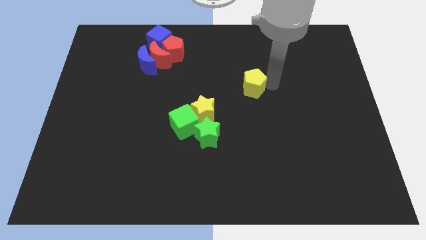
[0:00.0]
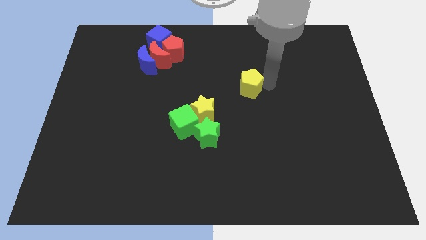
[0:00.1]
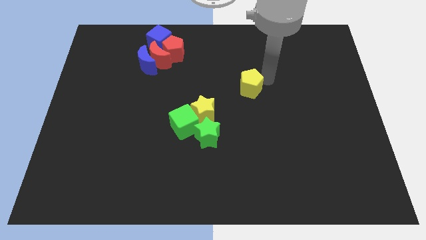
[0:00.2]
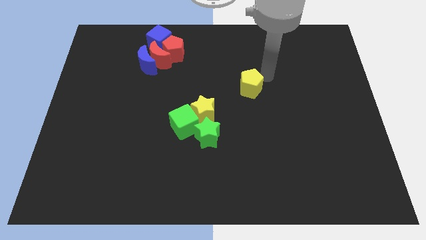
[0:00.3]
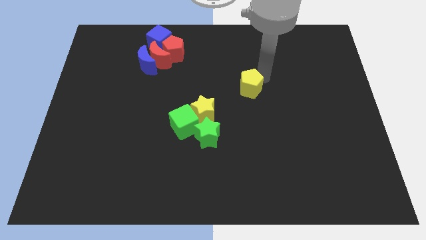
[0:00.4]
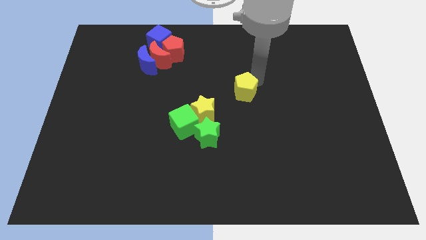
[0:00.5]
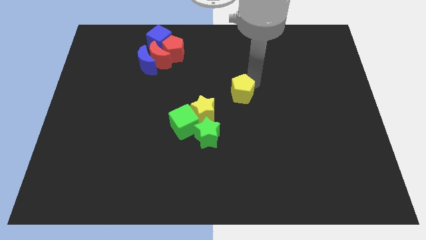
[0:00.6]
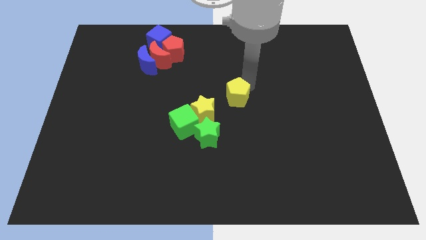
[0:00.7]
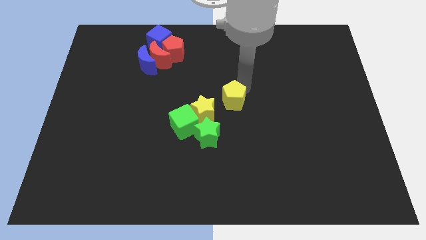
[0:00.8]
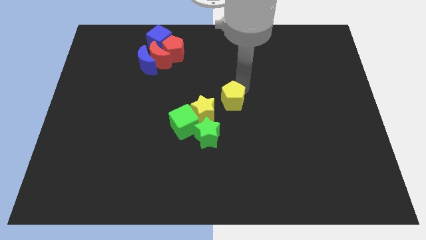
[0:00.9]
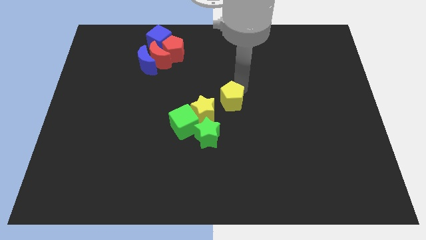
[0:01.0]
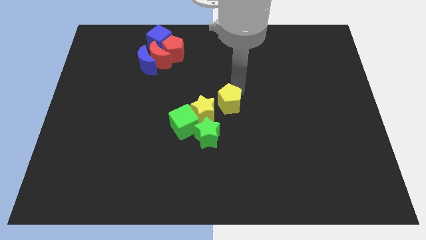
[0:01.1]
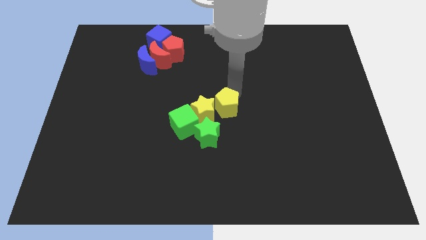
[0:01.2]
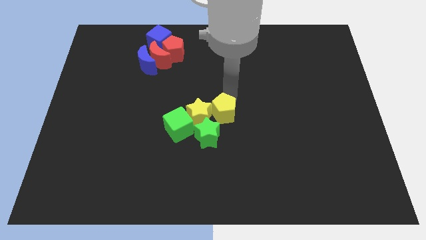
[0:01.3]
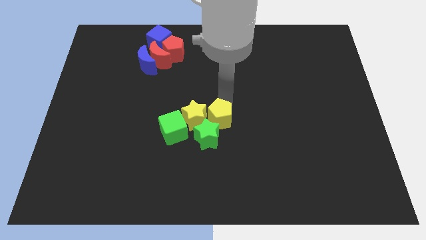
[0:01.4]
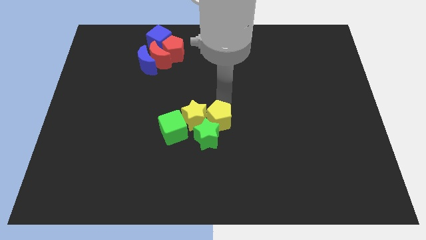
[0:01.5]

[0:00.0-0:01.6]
move the yellow pentagon to the right of the yellow star

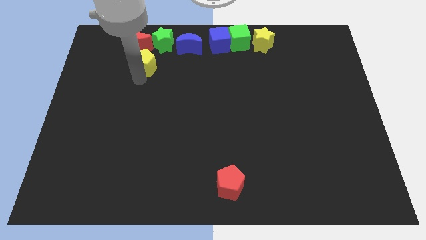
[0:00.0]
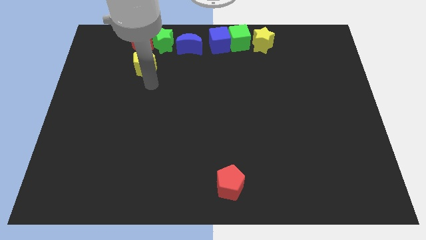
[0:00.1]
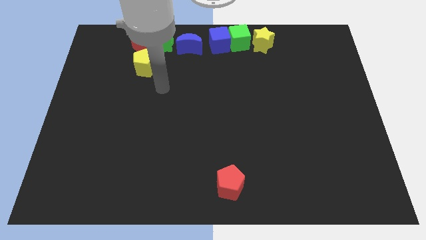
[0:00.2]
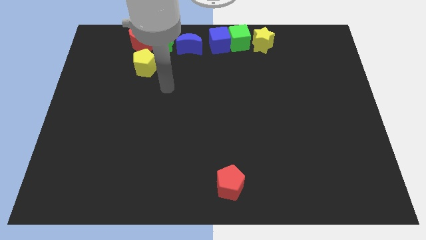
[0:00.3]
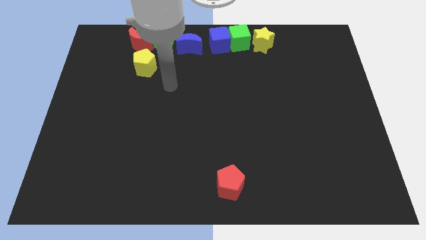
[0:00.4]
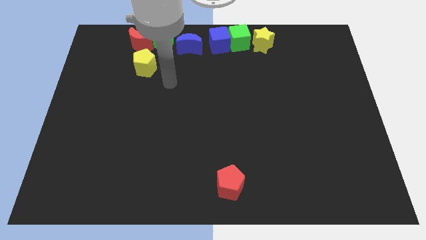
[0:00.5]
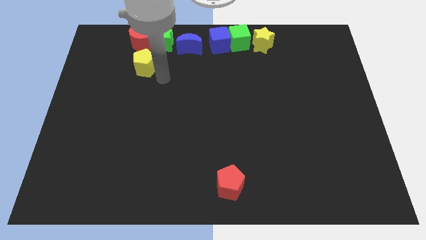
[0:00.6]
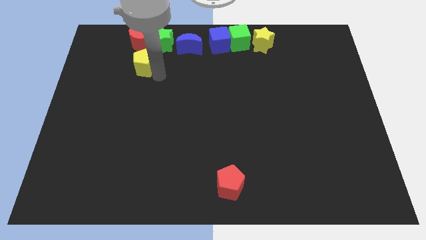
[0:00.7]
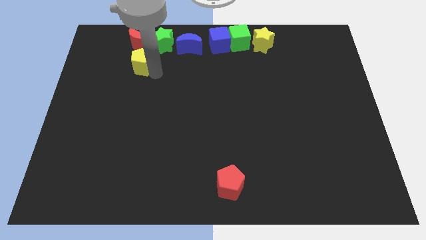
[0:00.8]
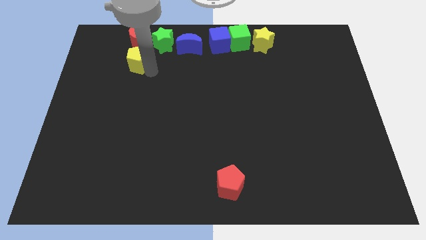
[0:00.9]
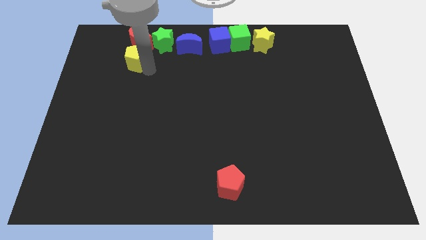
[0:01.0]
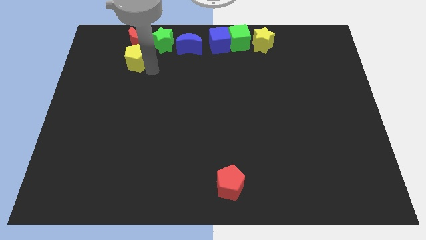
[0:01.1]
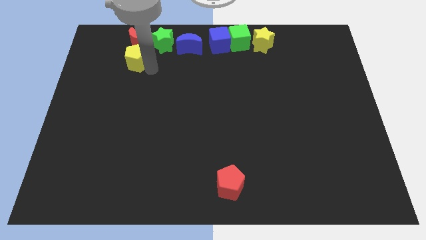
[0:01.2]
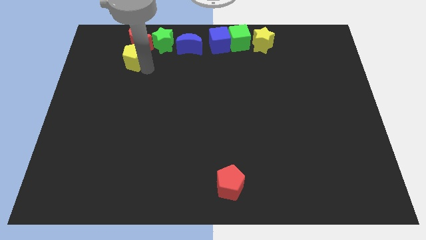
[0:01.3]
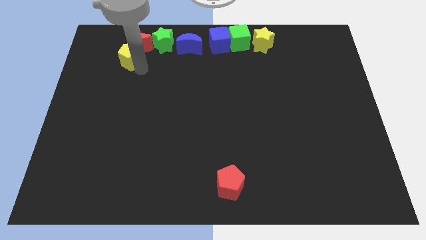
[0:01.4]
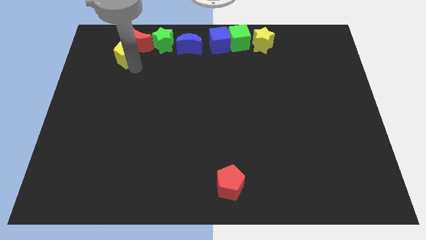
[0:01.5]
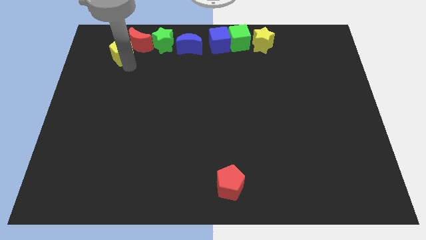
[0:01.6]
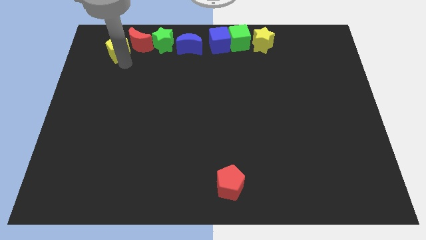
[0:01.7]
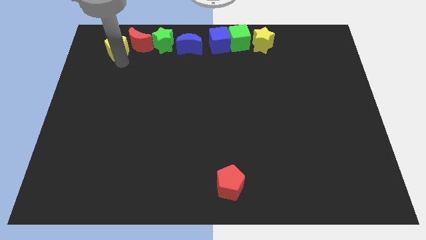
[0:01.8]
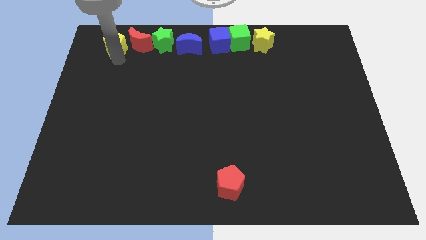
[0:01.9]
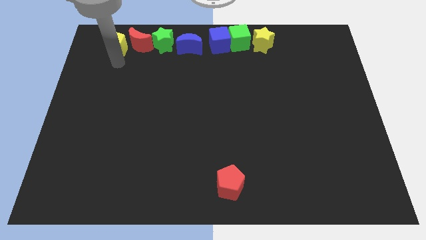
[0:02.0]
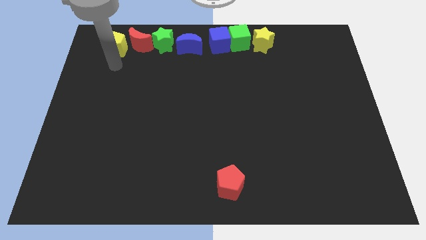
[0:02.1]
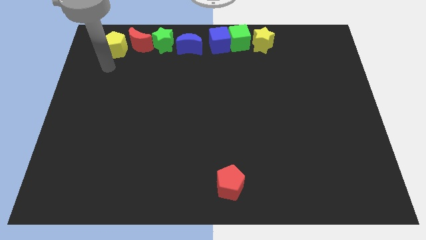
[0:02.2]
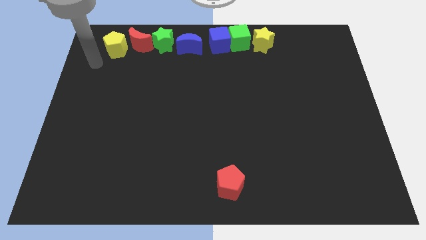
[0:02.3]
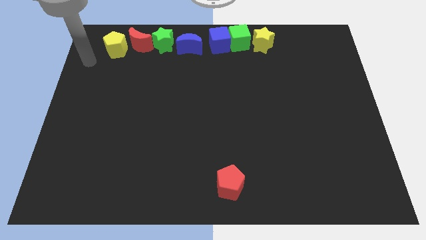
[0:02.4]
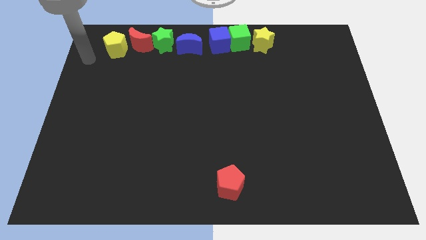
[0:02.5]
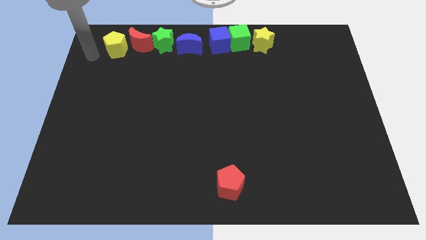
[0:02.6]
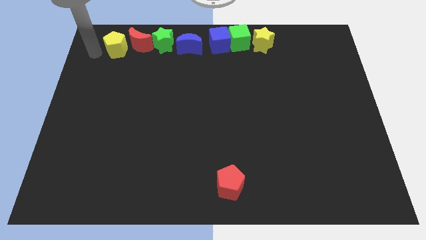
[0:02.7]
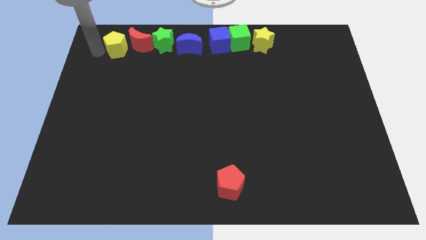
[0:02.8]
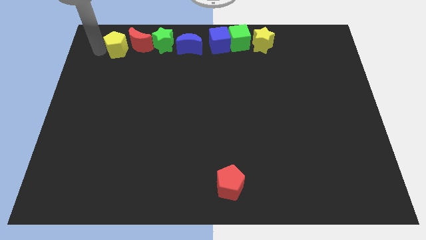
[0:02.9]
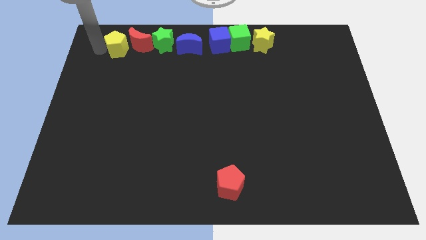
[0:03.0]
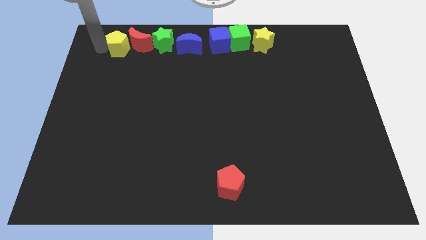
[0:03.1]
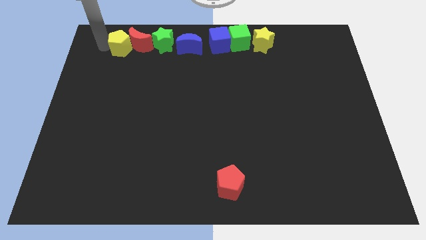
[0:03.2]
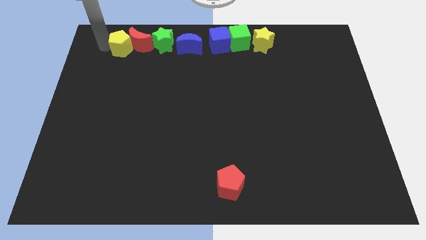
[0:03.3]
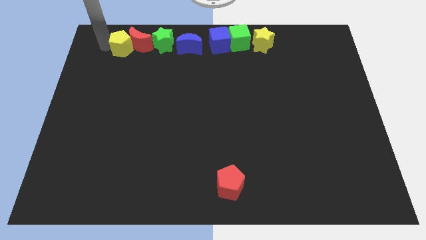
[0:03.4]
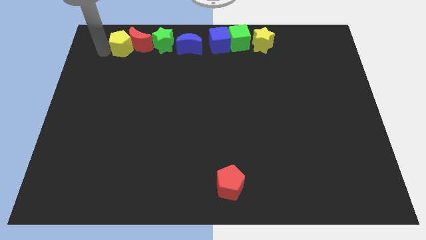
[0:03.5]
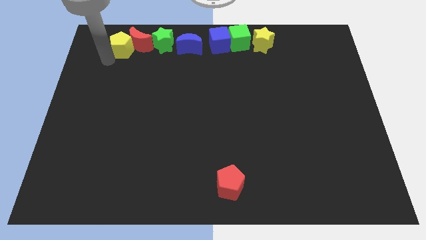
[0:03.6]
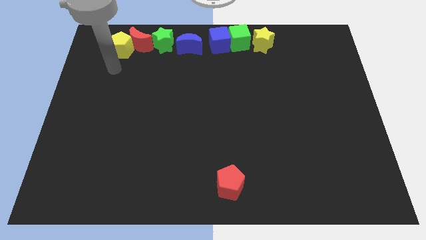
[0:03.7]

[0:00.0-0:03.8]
move the yellow pentagon into the left side of the red crescent

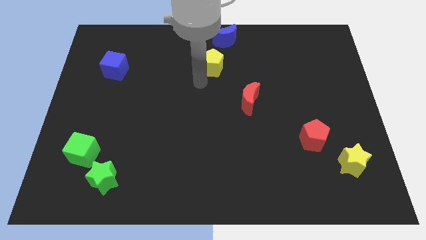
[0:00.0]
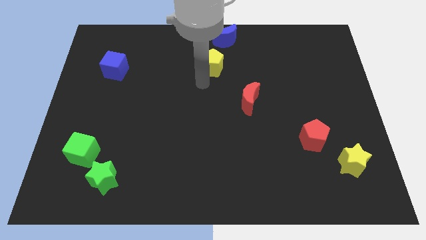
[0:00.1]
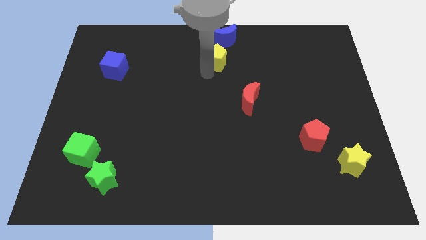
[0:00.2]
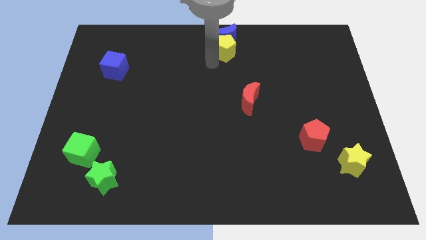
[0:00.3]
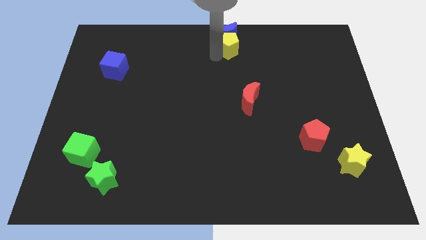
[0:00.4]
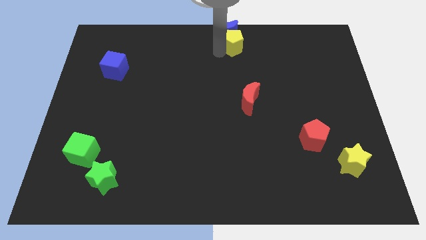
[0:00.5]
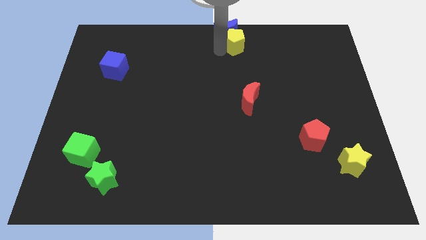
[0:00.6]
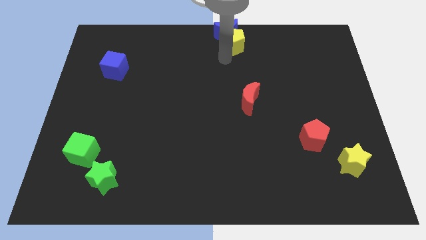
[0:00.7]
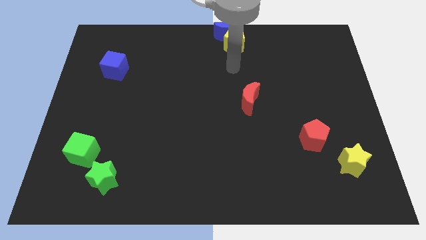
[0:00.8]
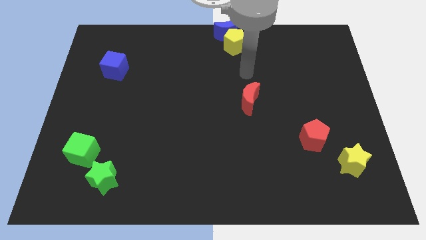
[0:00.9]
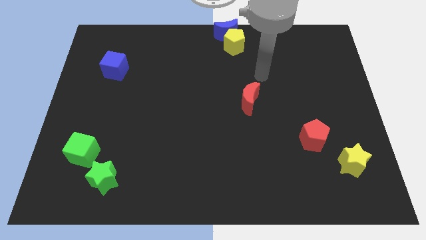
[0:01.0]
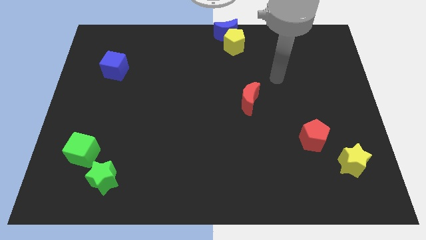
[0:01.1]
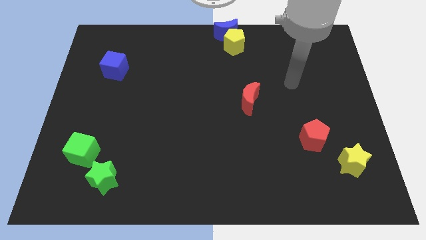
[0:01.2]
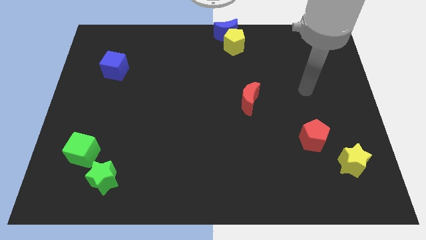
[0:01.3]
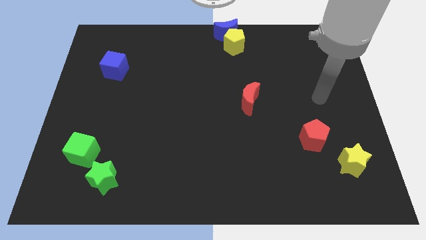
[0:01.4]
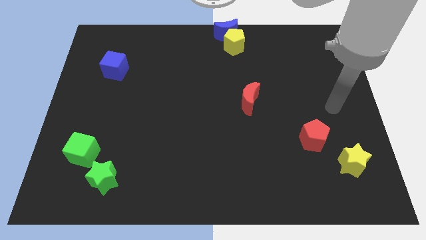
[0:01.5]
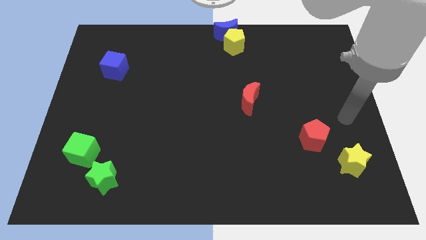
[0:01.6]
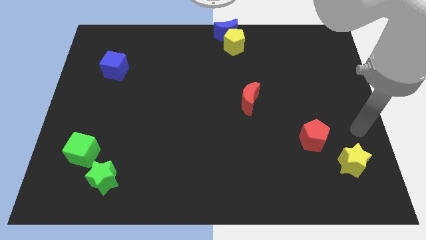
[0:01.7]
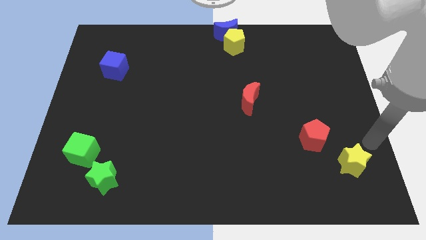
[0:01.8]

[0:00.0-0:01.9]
push the yellow pentagon into the blue moon

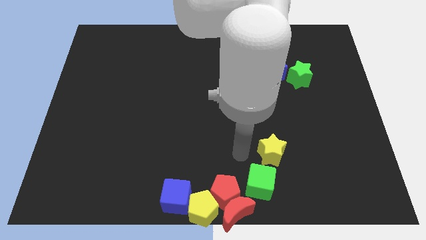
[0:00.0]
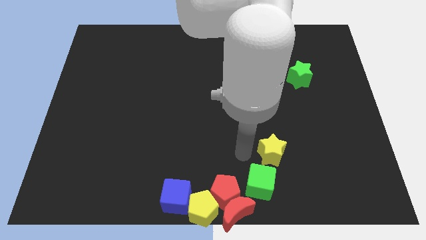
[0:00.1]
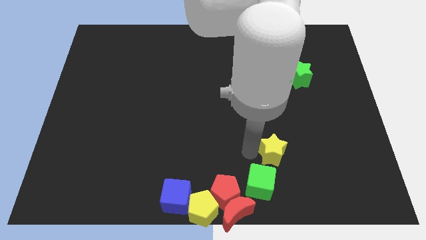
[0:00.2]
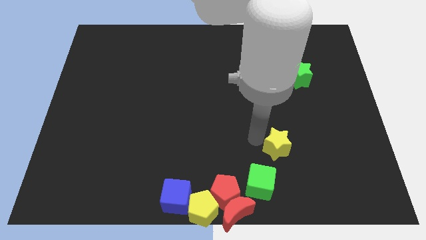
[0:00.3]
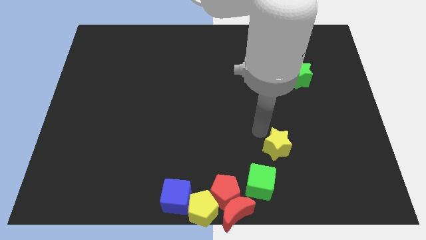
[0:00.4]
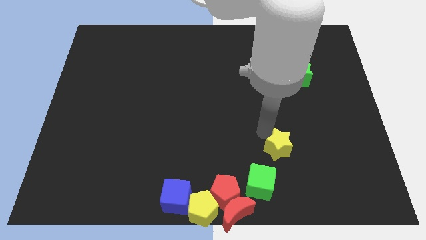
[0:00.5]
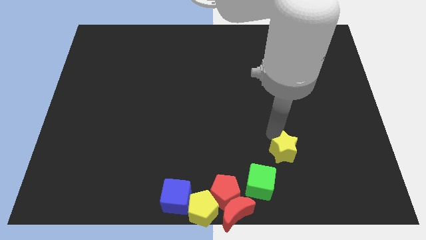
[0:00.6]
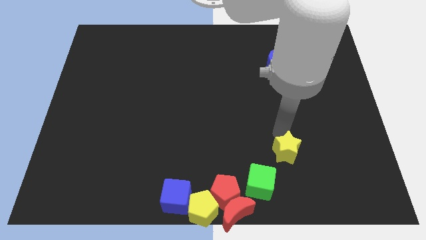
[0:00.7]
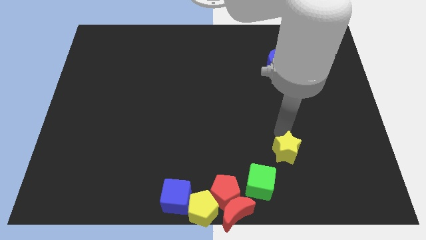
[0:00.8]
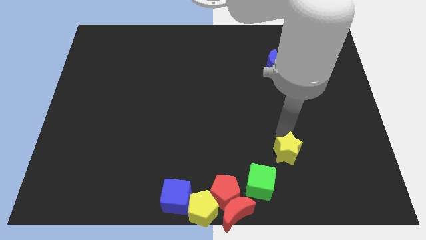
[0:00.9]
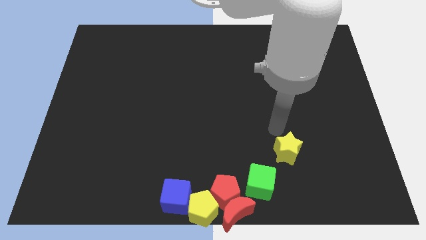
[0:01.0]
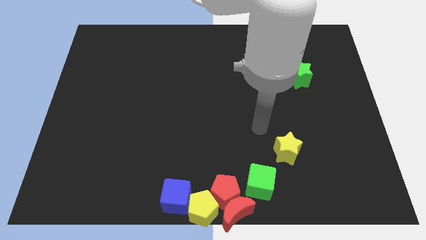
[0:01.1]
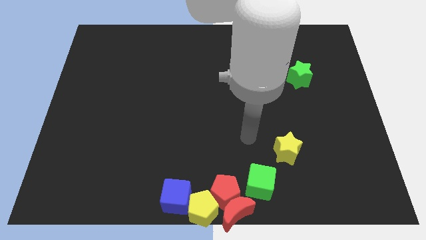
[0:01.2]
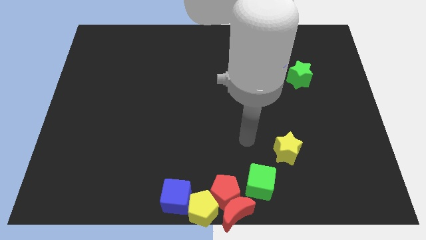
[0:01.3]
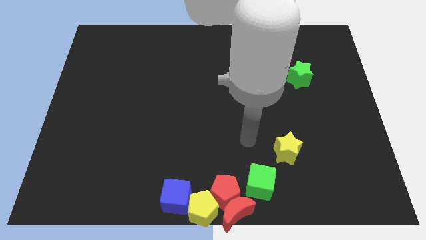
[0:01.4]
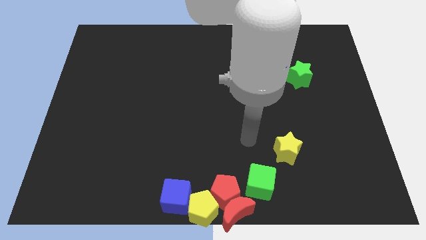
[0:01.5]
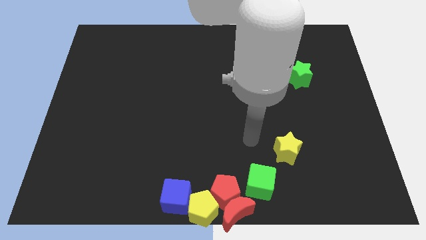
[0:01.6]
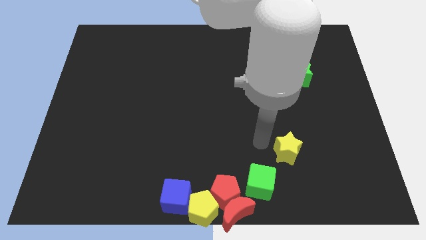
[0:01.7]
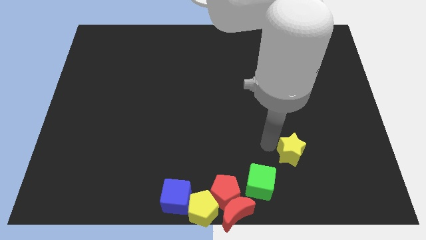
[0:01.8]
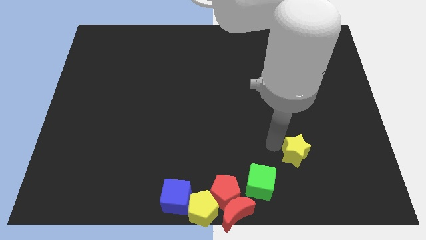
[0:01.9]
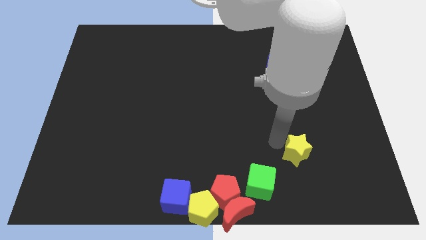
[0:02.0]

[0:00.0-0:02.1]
separate yellow star from green cube
